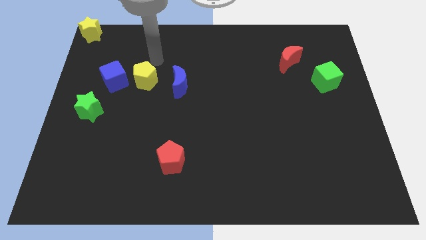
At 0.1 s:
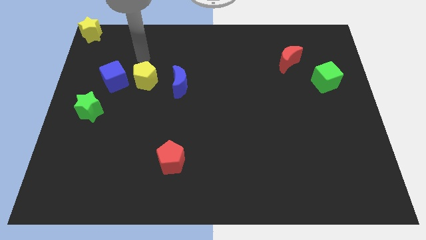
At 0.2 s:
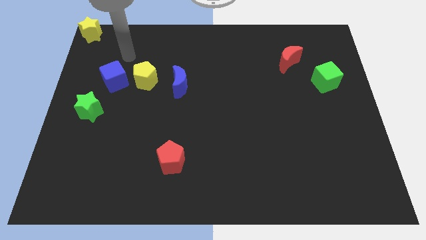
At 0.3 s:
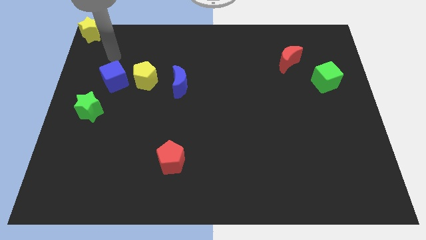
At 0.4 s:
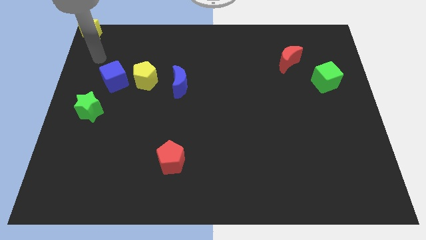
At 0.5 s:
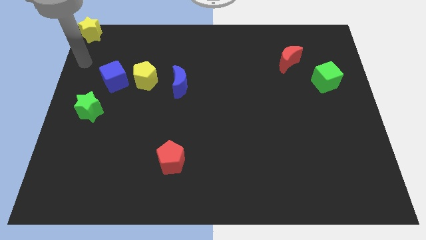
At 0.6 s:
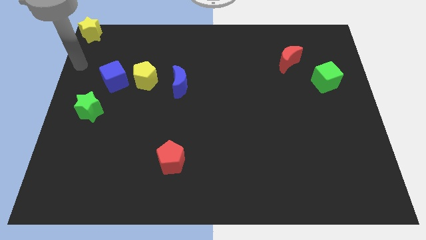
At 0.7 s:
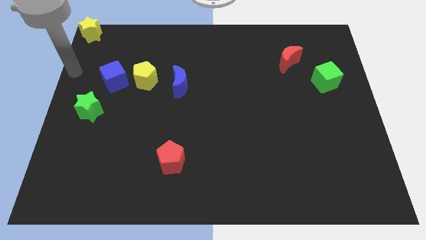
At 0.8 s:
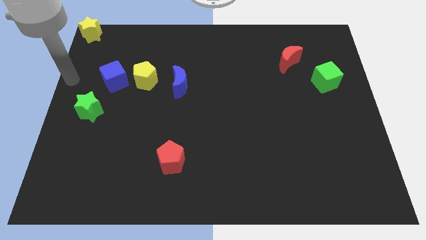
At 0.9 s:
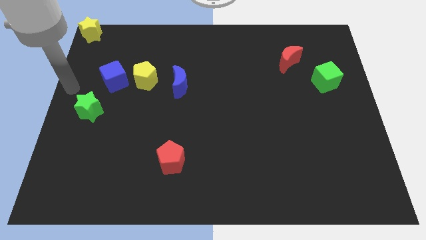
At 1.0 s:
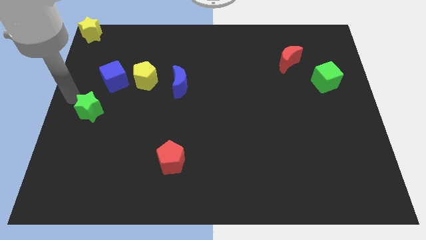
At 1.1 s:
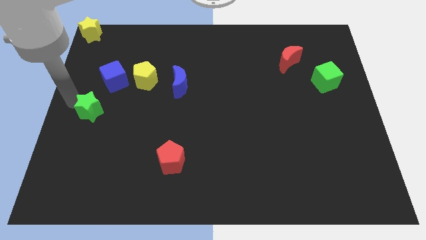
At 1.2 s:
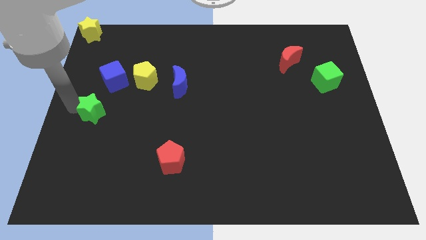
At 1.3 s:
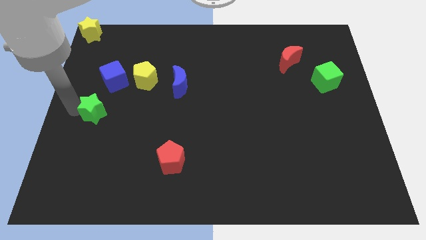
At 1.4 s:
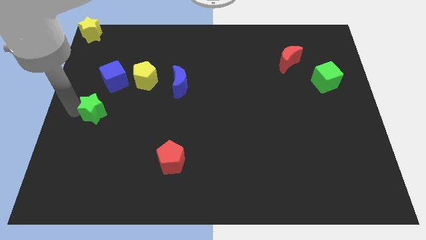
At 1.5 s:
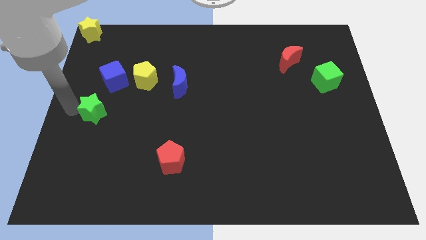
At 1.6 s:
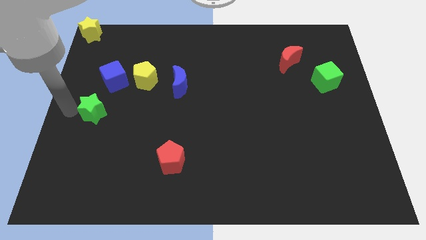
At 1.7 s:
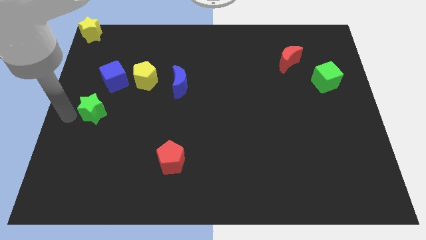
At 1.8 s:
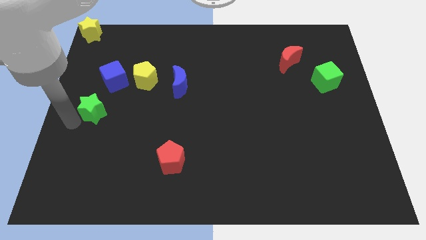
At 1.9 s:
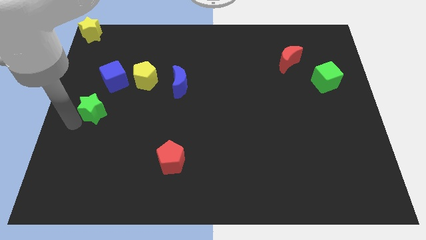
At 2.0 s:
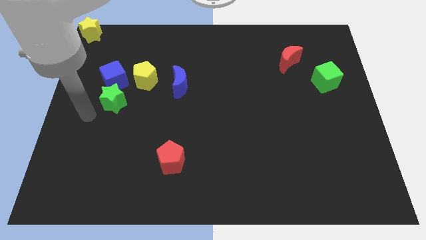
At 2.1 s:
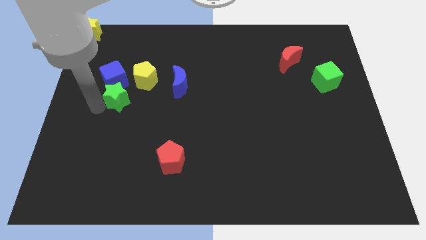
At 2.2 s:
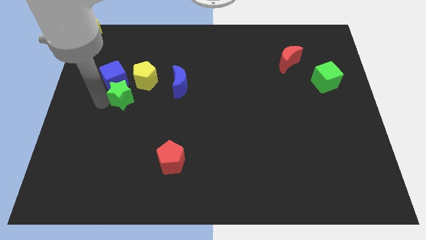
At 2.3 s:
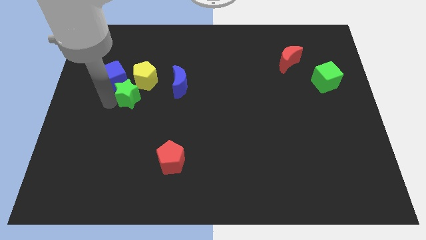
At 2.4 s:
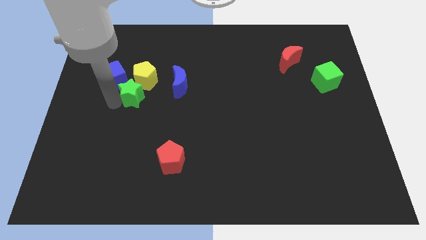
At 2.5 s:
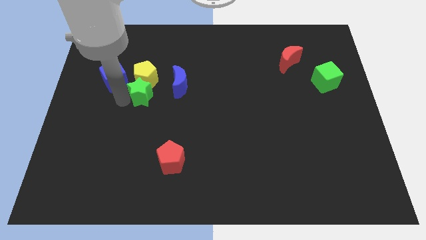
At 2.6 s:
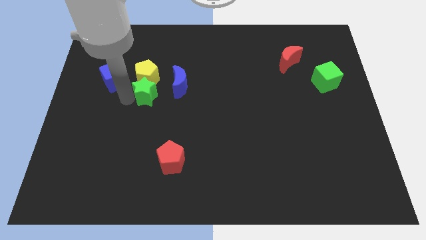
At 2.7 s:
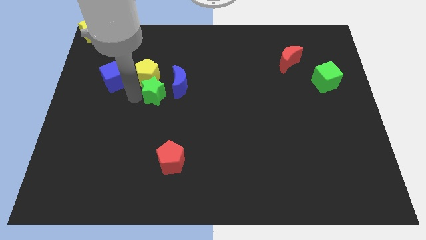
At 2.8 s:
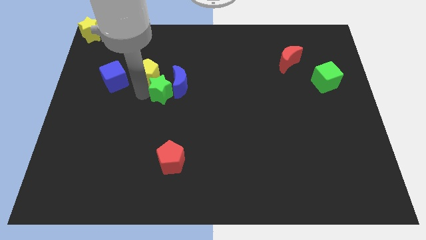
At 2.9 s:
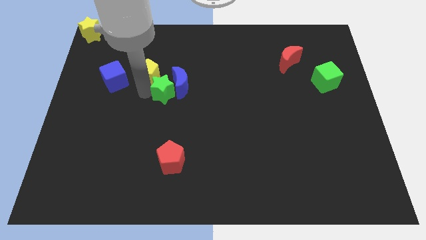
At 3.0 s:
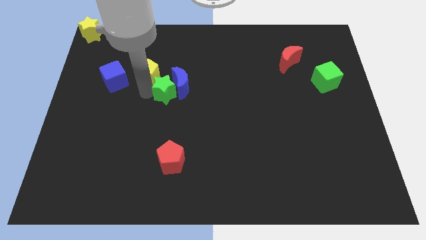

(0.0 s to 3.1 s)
add green star into blue moon

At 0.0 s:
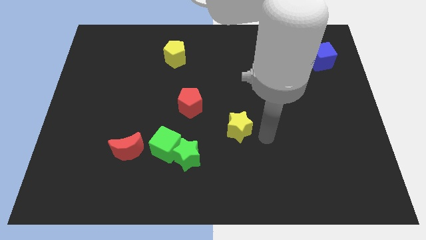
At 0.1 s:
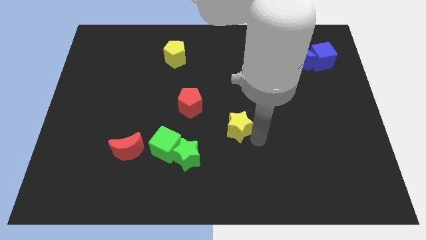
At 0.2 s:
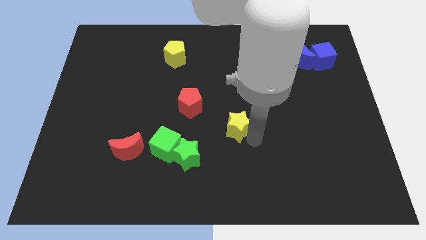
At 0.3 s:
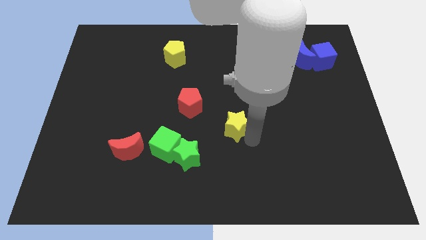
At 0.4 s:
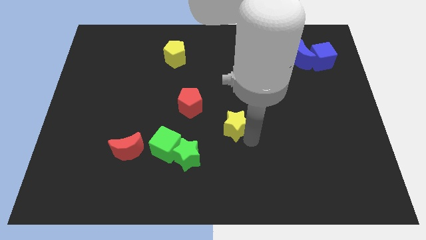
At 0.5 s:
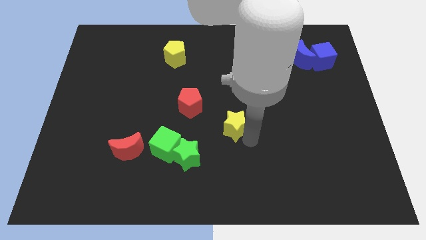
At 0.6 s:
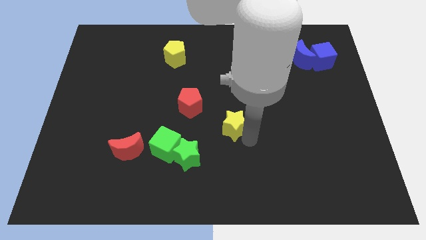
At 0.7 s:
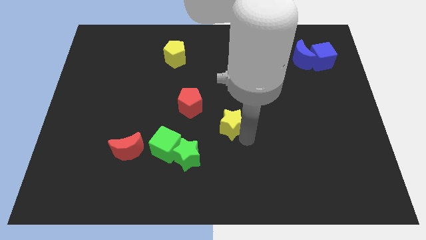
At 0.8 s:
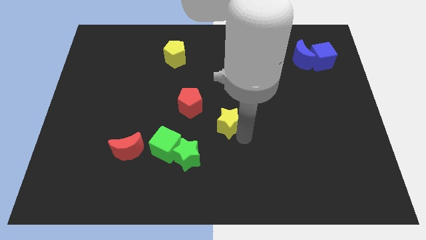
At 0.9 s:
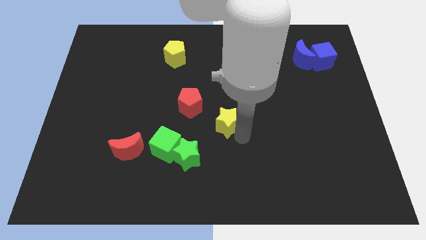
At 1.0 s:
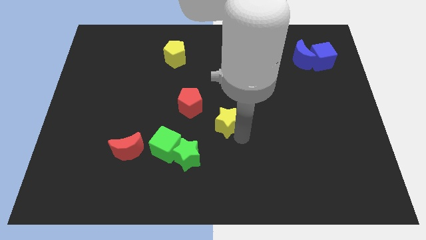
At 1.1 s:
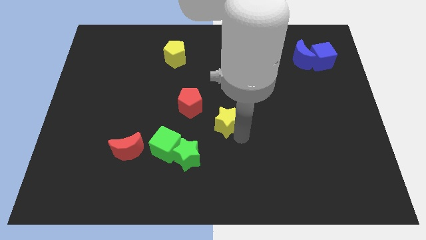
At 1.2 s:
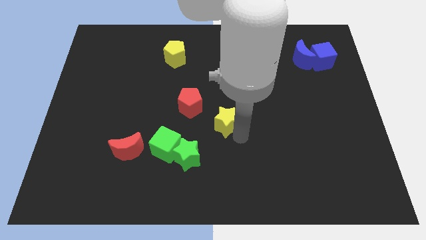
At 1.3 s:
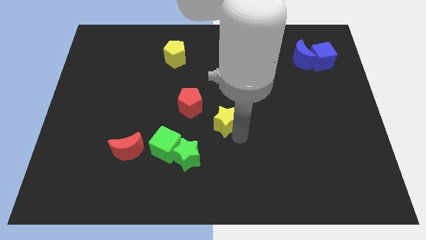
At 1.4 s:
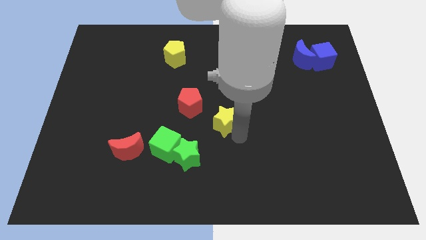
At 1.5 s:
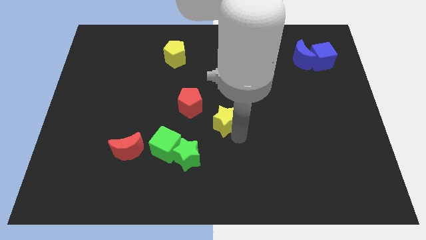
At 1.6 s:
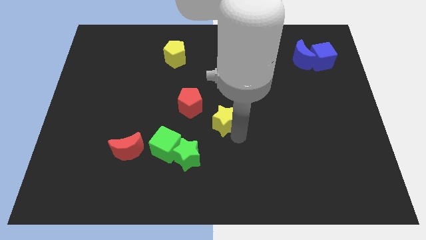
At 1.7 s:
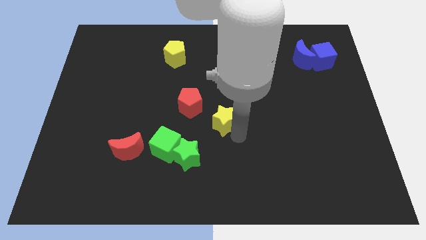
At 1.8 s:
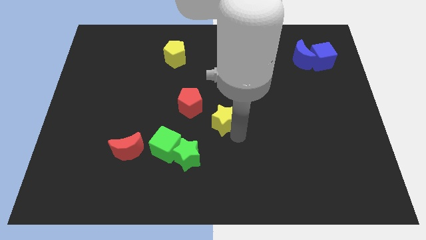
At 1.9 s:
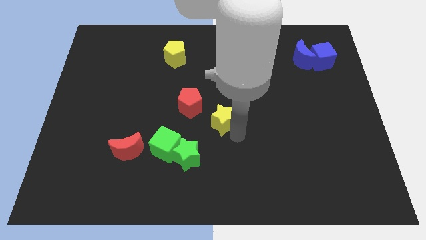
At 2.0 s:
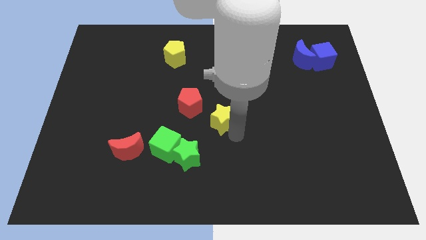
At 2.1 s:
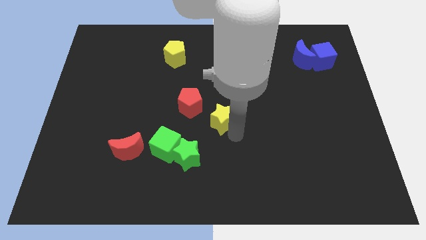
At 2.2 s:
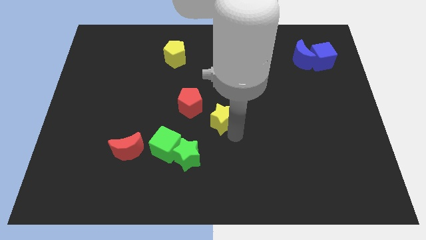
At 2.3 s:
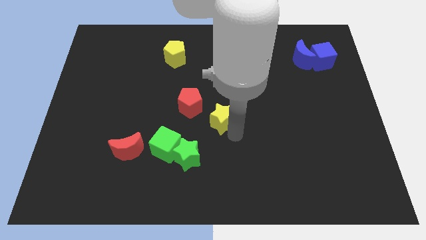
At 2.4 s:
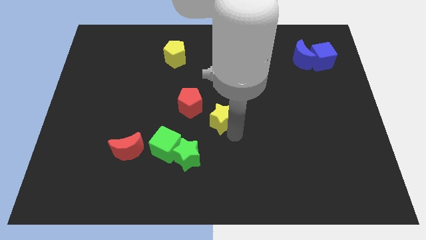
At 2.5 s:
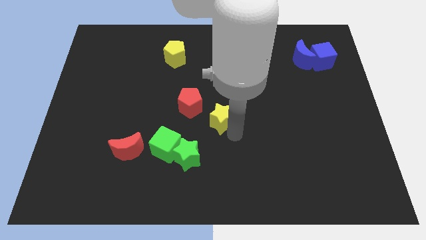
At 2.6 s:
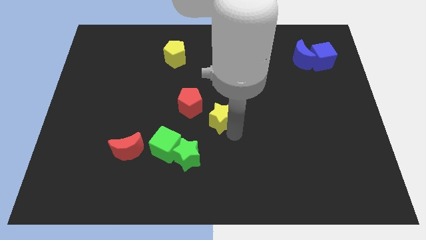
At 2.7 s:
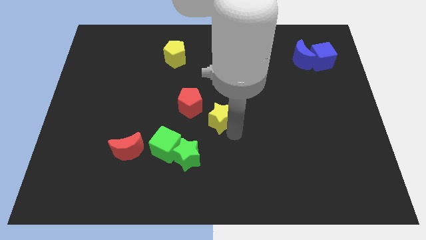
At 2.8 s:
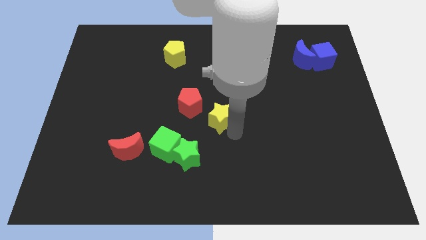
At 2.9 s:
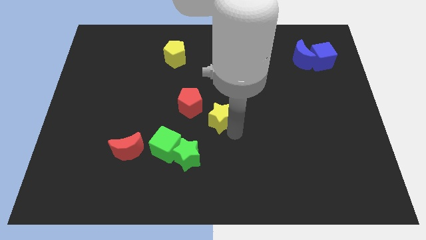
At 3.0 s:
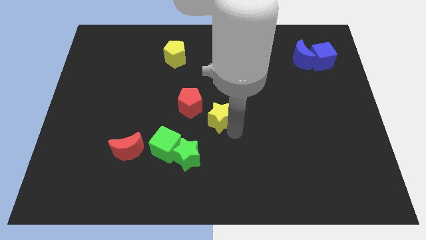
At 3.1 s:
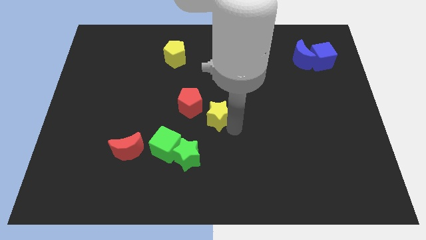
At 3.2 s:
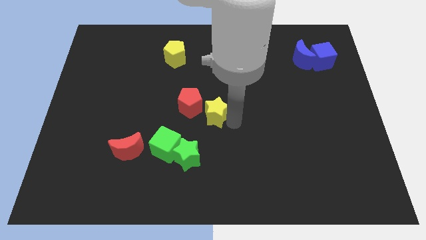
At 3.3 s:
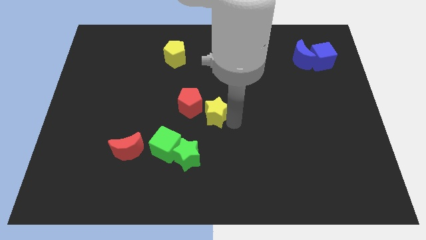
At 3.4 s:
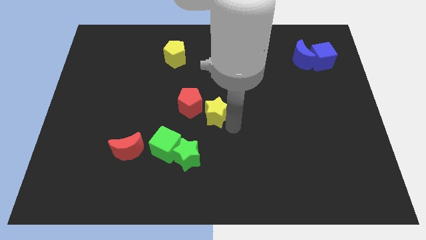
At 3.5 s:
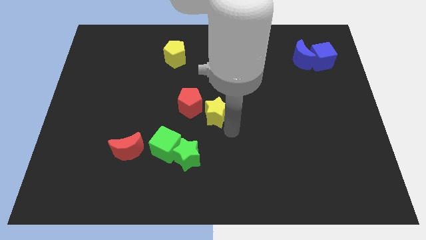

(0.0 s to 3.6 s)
move yellow star to the right of red pentagon

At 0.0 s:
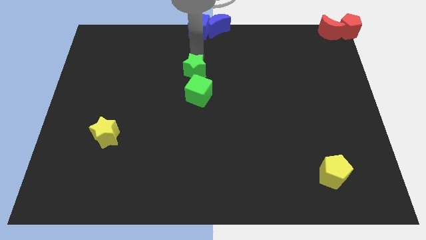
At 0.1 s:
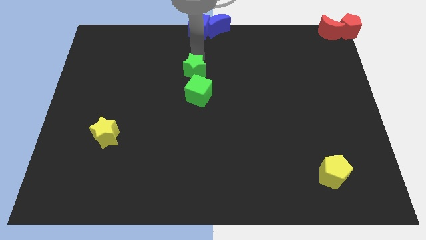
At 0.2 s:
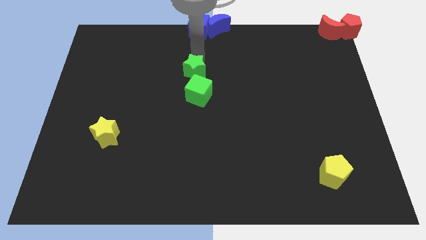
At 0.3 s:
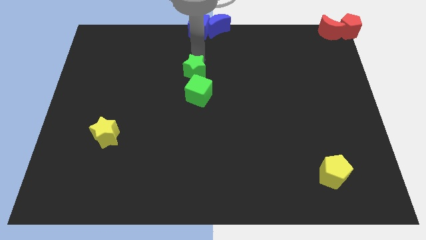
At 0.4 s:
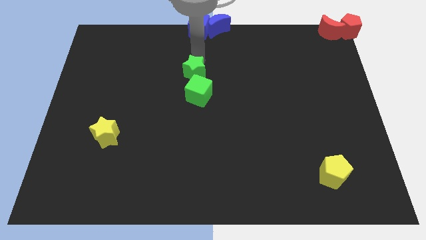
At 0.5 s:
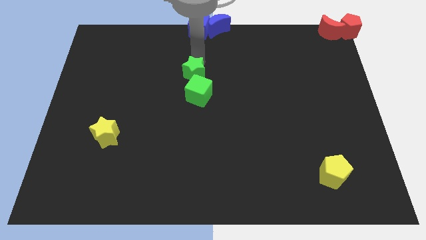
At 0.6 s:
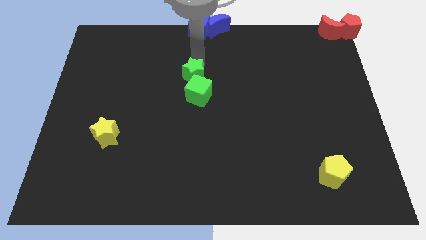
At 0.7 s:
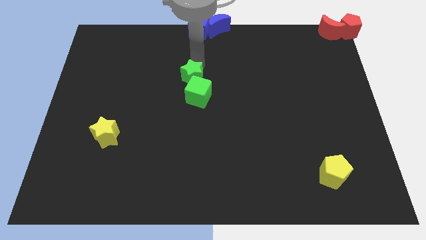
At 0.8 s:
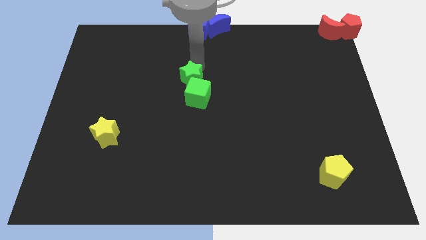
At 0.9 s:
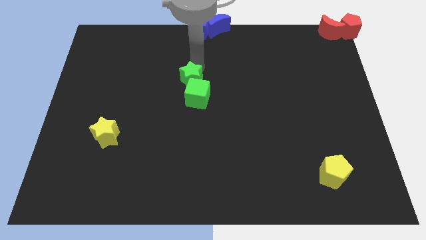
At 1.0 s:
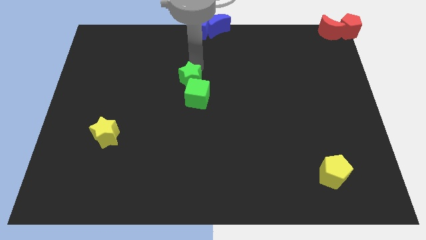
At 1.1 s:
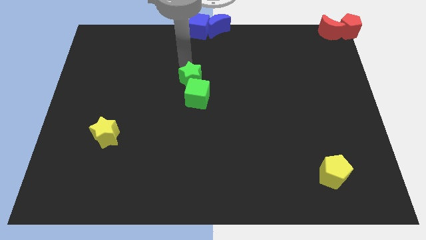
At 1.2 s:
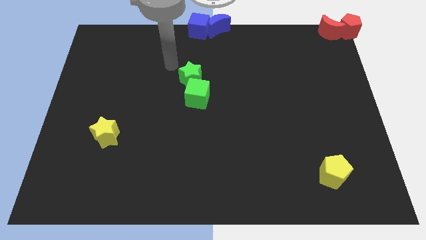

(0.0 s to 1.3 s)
slide the green star into the green cube

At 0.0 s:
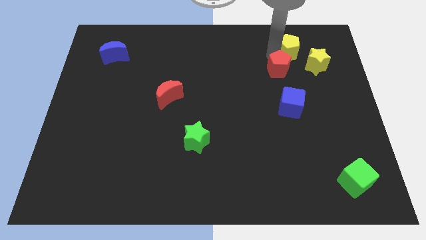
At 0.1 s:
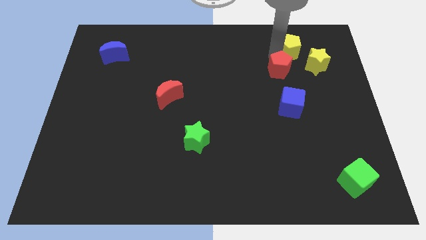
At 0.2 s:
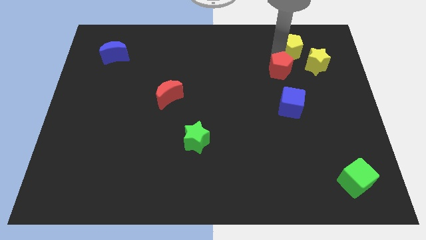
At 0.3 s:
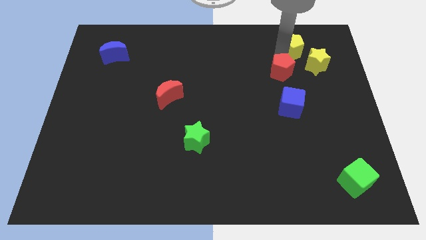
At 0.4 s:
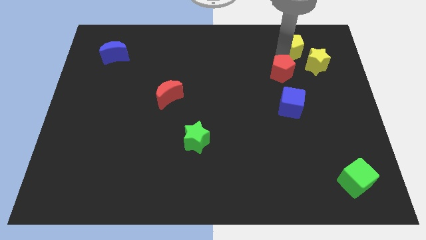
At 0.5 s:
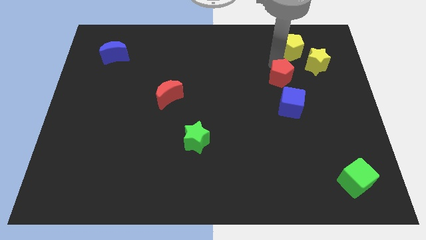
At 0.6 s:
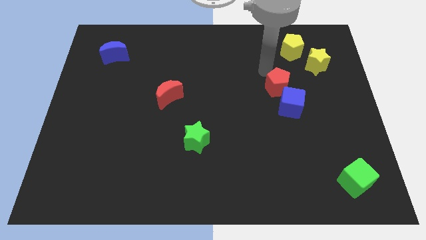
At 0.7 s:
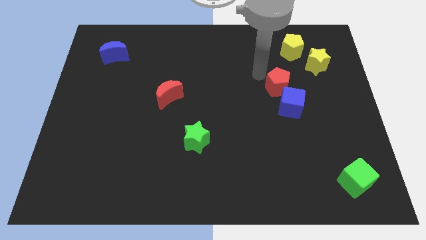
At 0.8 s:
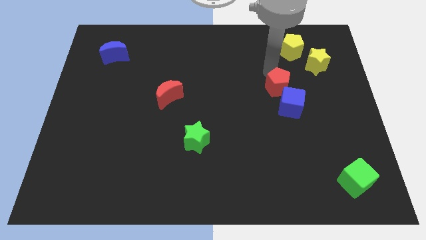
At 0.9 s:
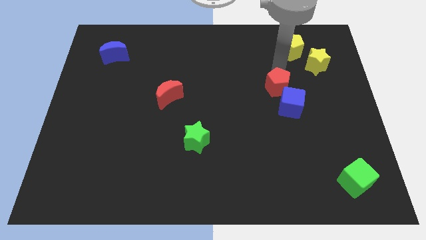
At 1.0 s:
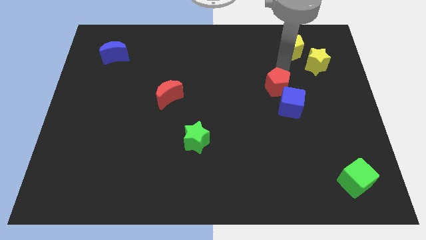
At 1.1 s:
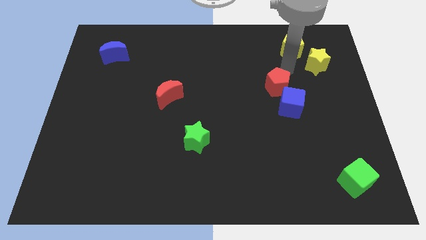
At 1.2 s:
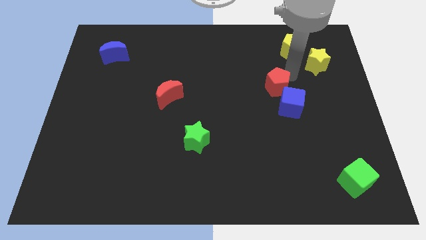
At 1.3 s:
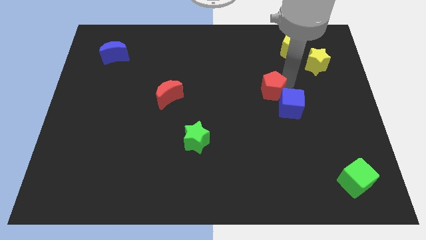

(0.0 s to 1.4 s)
separate the red pentagon from yellow pentagon
